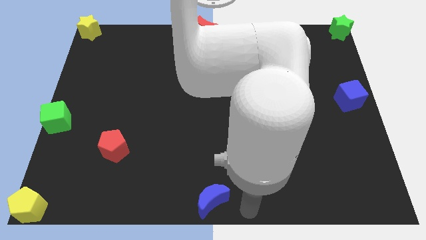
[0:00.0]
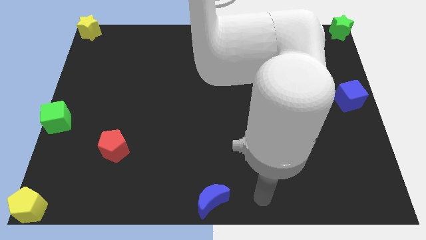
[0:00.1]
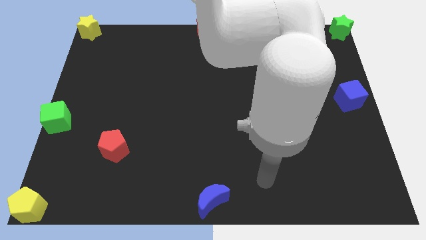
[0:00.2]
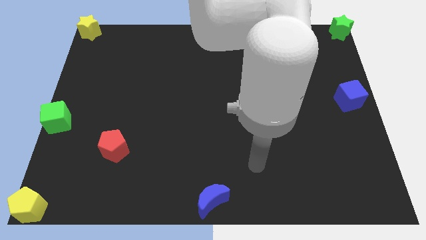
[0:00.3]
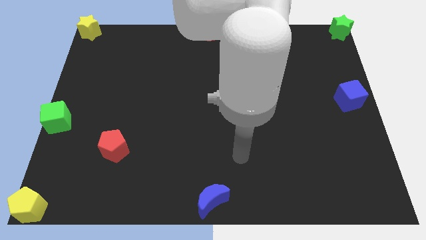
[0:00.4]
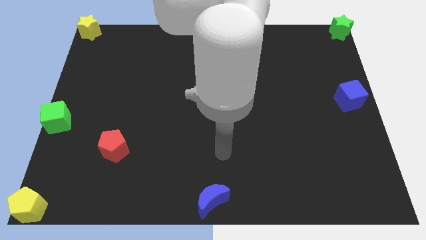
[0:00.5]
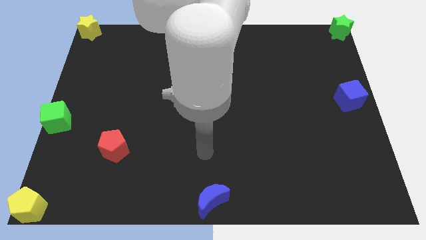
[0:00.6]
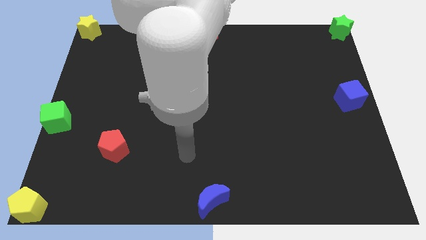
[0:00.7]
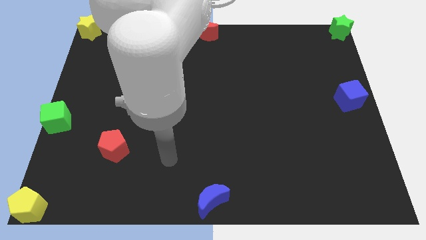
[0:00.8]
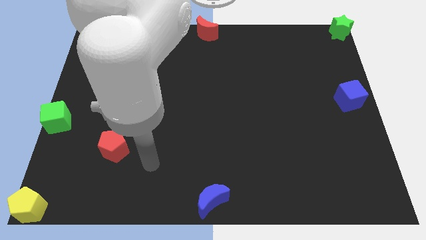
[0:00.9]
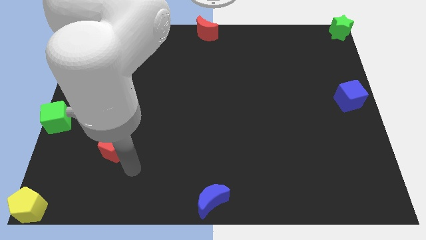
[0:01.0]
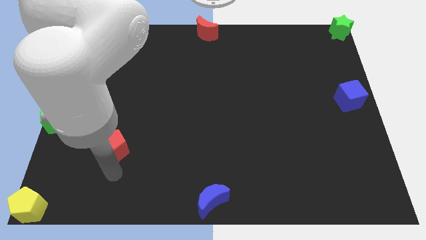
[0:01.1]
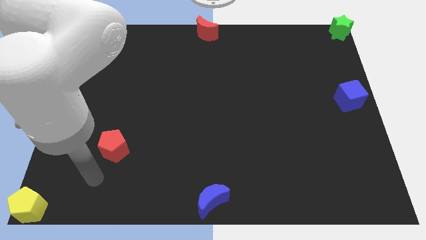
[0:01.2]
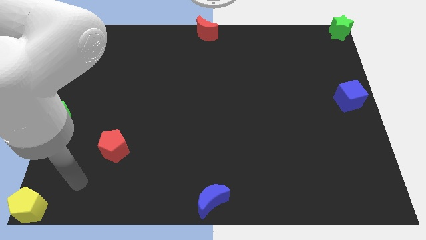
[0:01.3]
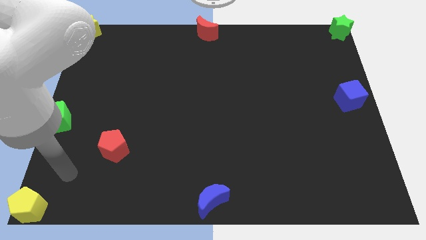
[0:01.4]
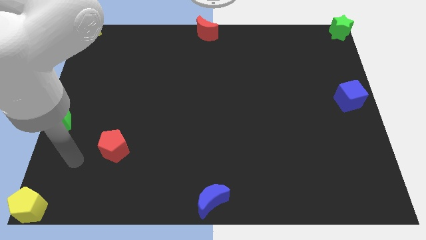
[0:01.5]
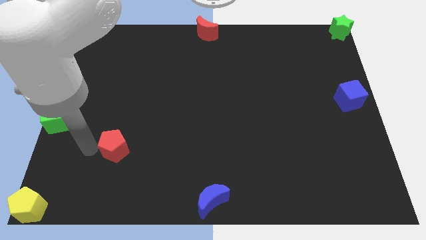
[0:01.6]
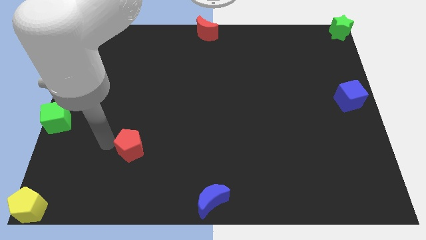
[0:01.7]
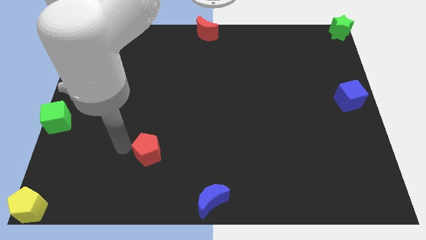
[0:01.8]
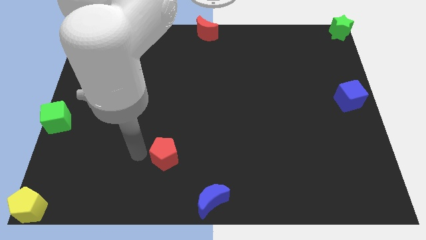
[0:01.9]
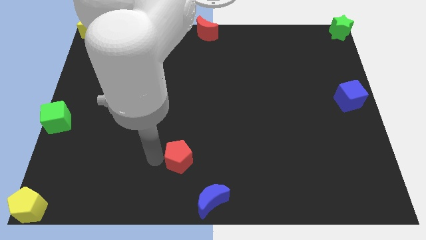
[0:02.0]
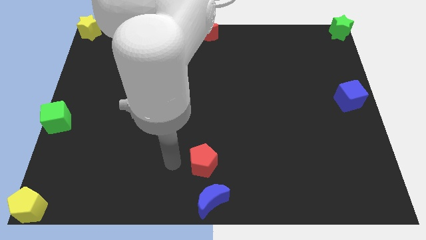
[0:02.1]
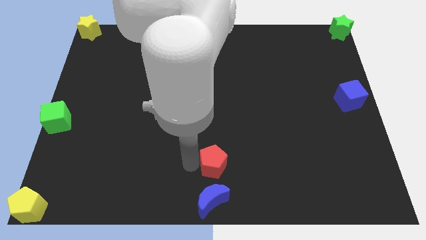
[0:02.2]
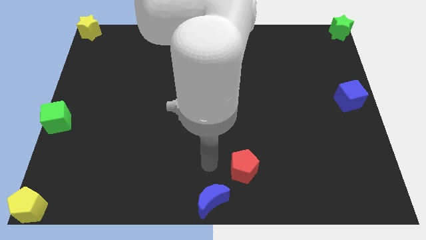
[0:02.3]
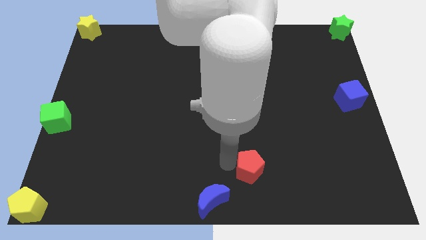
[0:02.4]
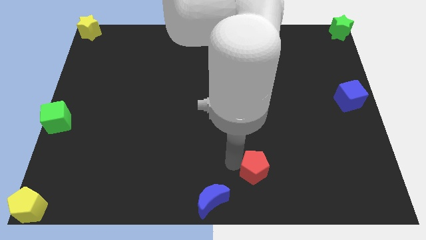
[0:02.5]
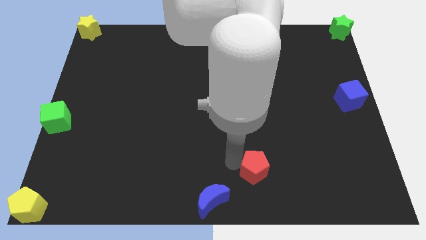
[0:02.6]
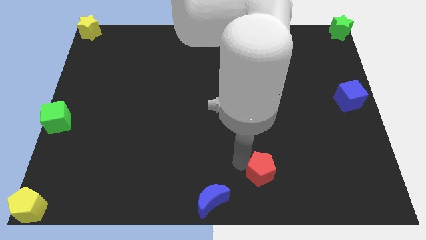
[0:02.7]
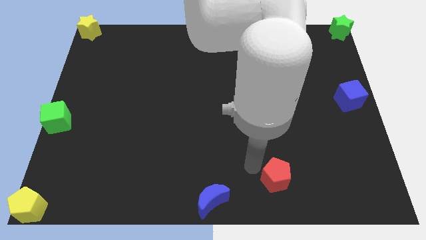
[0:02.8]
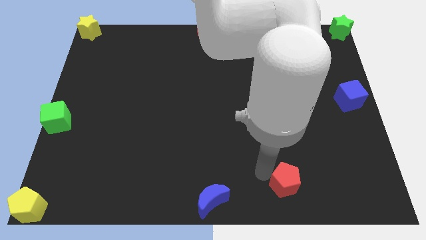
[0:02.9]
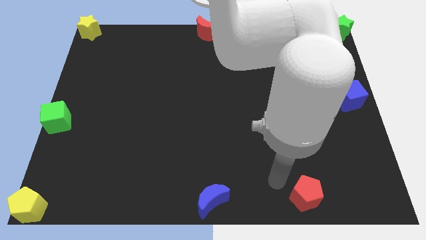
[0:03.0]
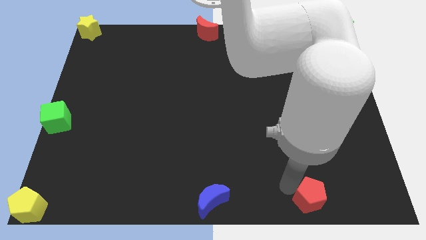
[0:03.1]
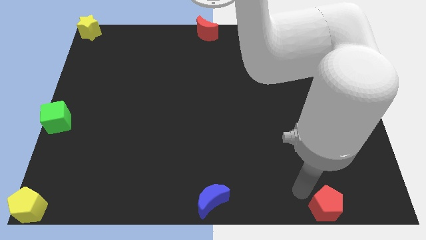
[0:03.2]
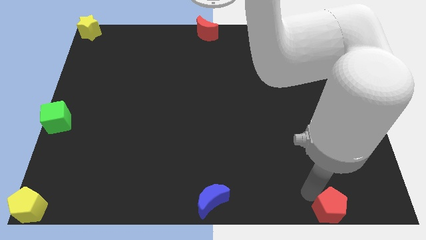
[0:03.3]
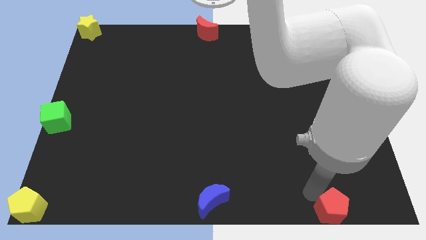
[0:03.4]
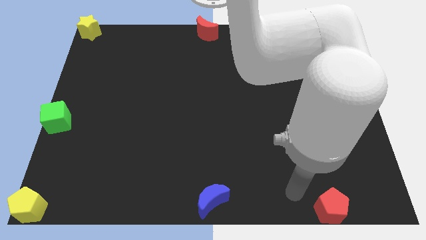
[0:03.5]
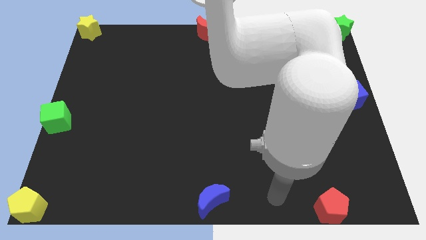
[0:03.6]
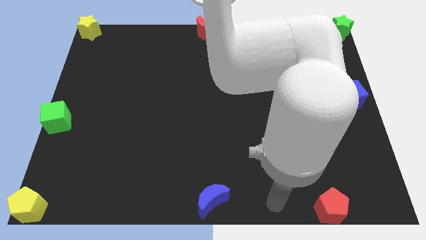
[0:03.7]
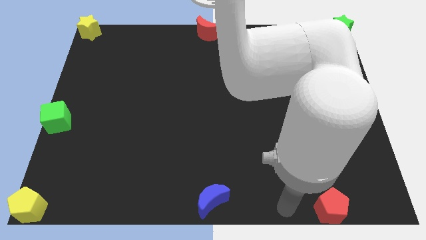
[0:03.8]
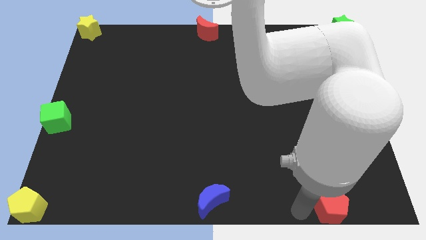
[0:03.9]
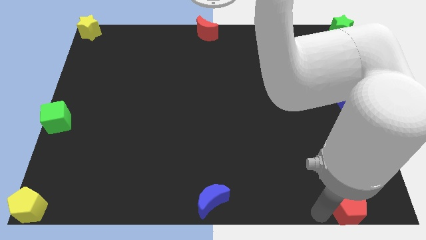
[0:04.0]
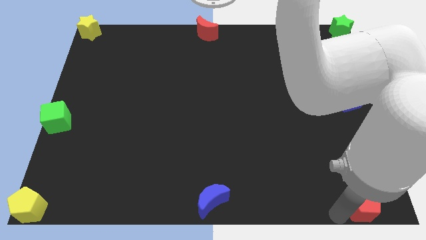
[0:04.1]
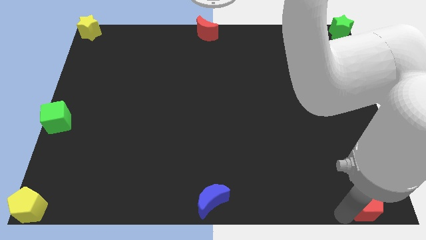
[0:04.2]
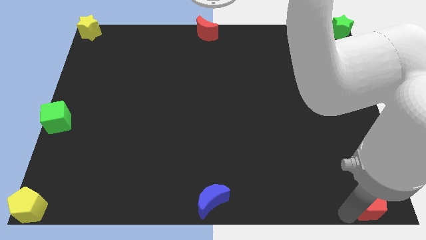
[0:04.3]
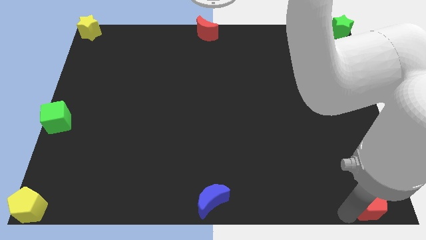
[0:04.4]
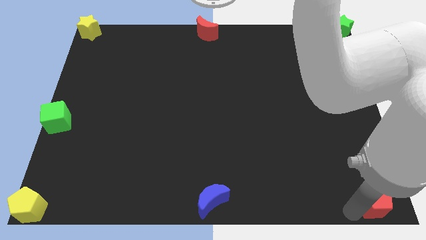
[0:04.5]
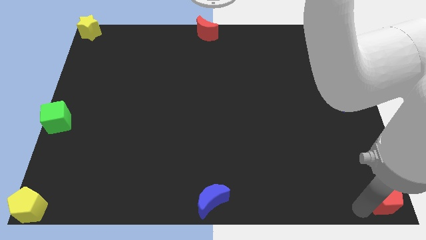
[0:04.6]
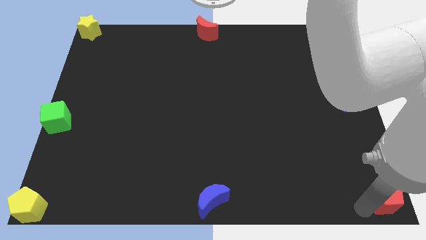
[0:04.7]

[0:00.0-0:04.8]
slide the red pentagon towards the bottom right side of the table

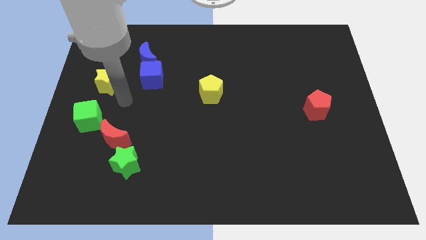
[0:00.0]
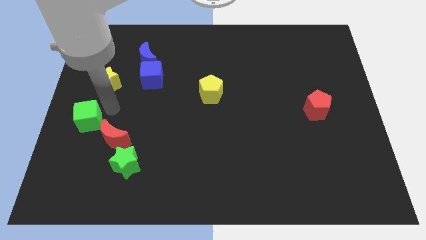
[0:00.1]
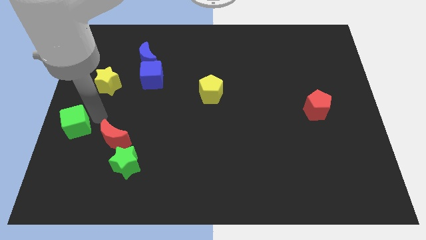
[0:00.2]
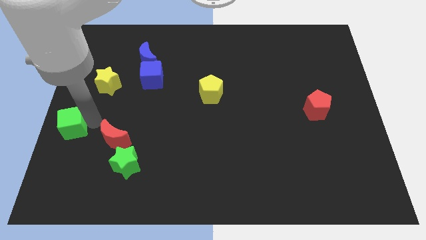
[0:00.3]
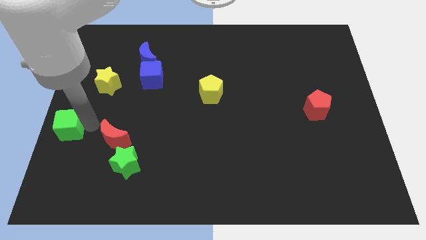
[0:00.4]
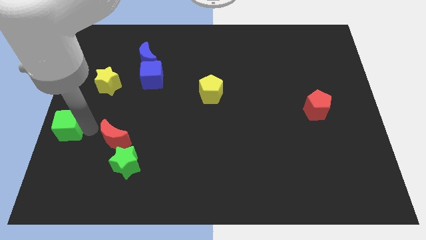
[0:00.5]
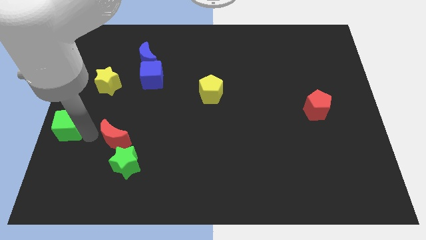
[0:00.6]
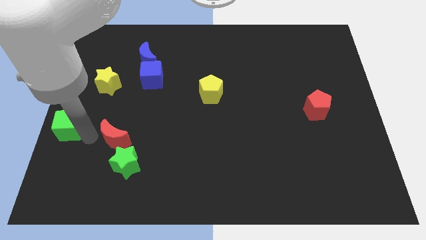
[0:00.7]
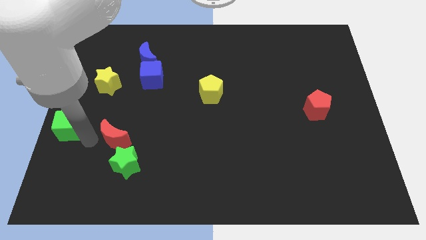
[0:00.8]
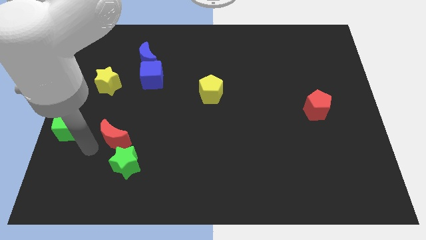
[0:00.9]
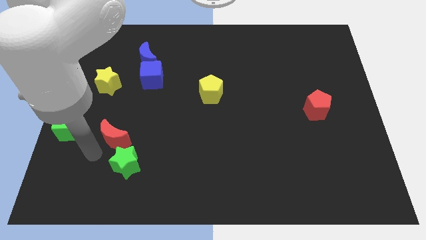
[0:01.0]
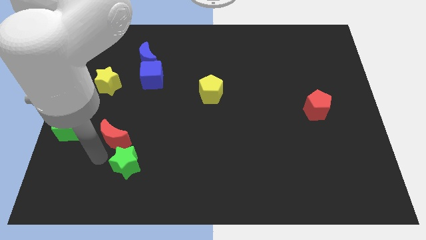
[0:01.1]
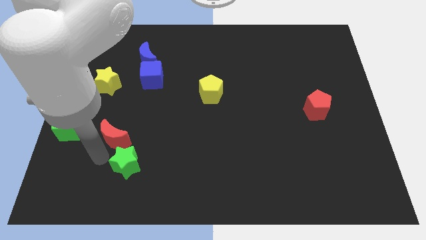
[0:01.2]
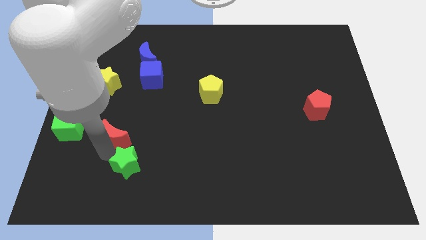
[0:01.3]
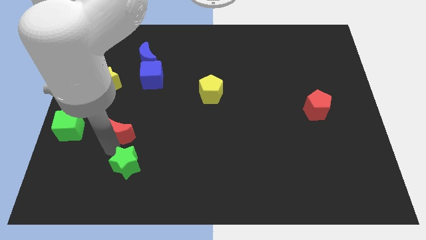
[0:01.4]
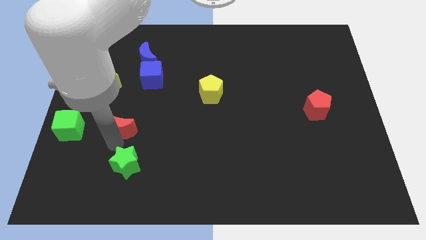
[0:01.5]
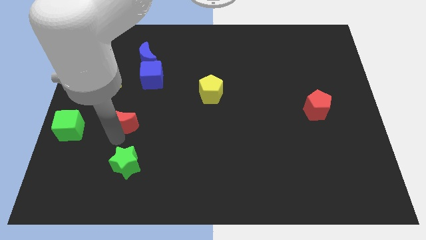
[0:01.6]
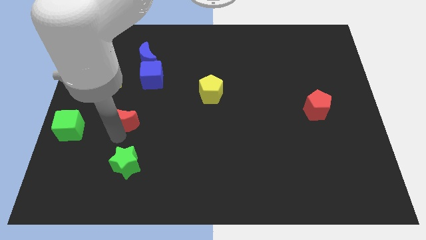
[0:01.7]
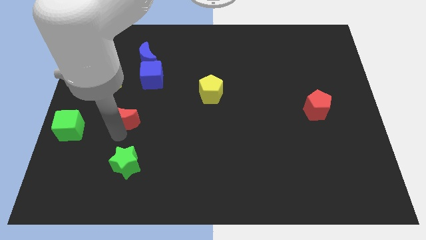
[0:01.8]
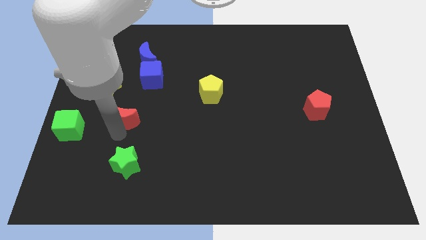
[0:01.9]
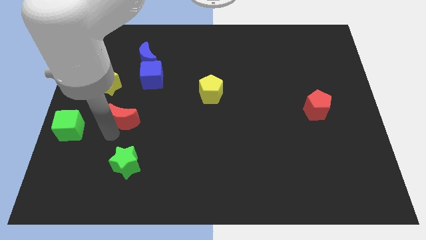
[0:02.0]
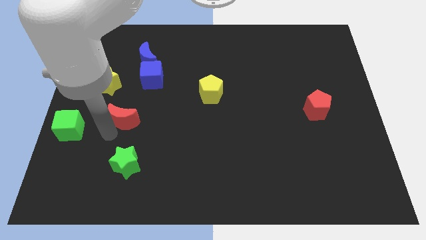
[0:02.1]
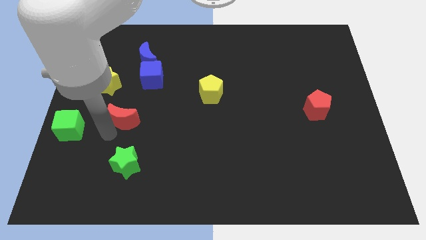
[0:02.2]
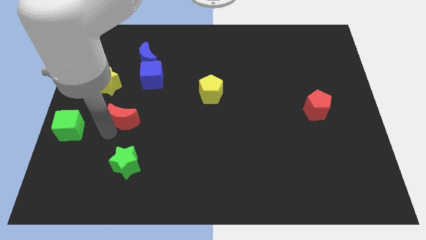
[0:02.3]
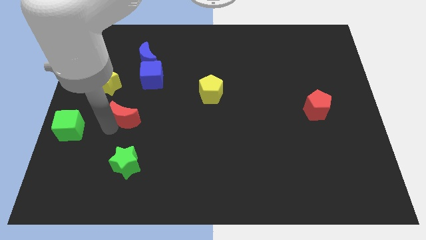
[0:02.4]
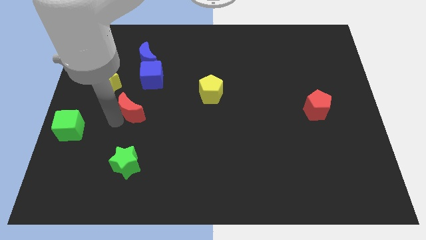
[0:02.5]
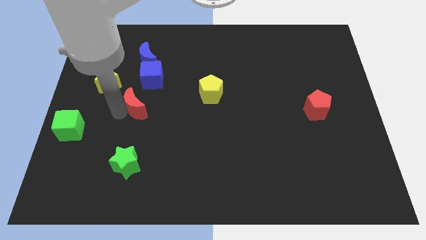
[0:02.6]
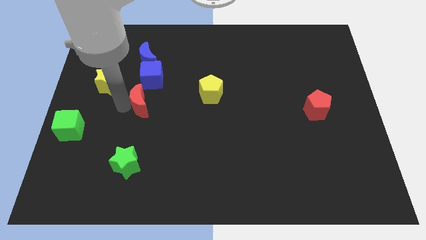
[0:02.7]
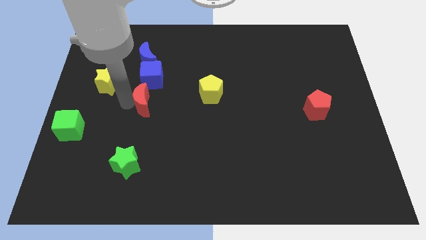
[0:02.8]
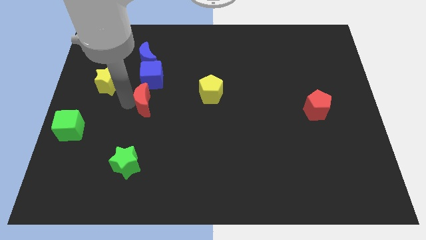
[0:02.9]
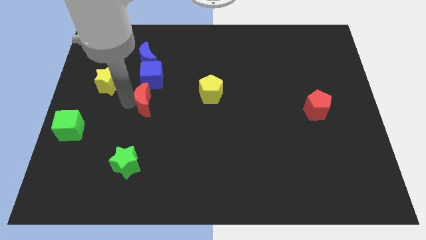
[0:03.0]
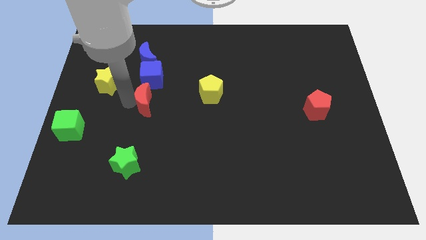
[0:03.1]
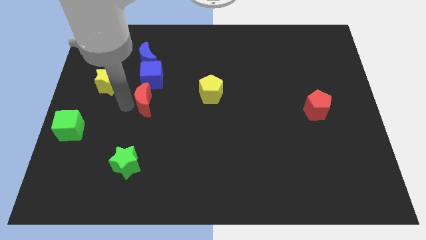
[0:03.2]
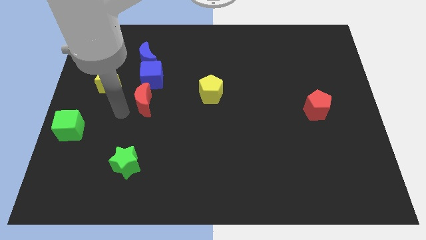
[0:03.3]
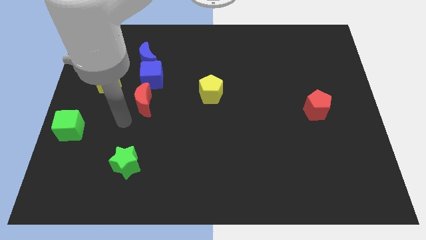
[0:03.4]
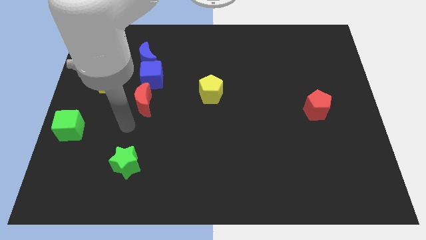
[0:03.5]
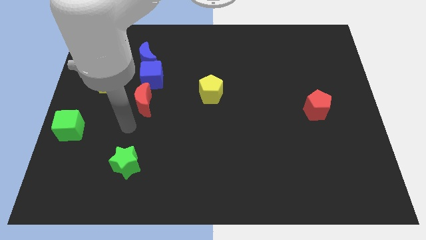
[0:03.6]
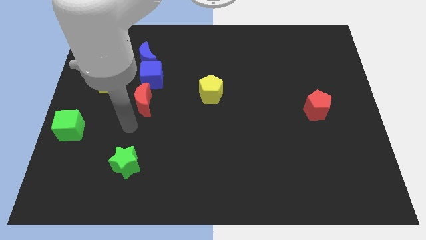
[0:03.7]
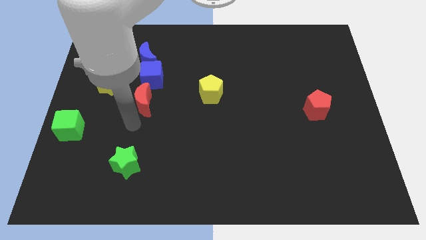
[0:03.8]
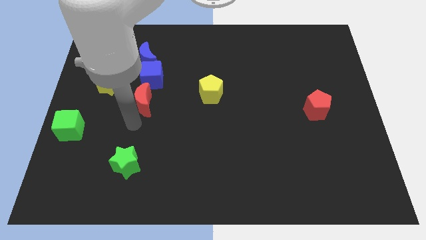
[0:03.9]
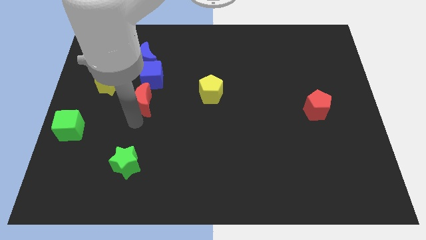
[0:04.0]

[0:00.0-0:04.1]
place the red moon below the blue cube
